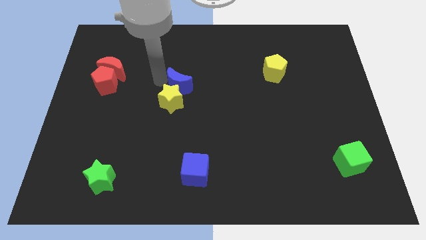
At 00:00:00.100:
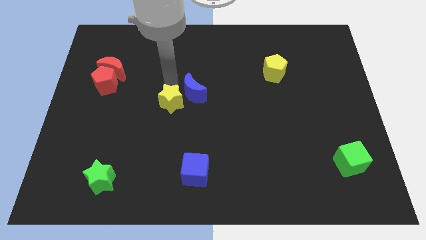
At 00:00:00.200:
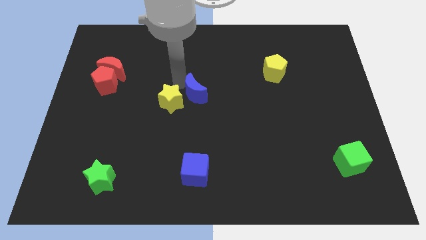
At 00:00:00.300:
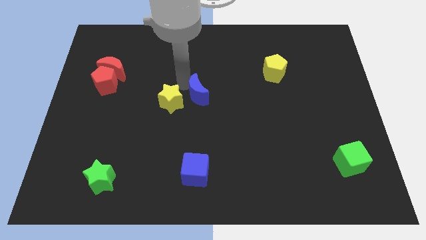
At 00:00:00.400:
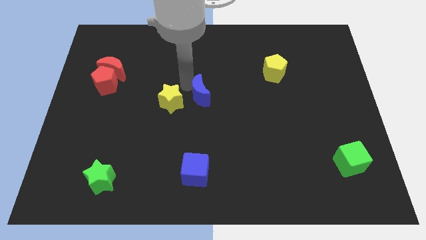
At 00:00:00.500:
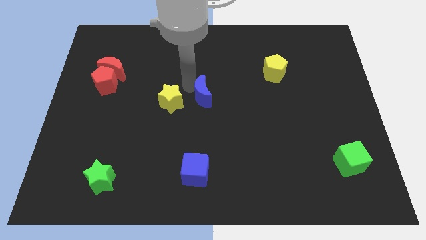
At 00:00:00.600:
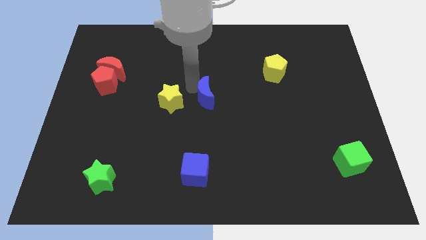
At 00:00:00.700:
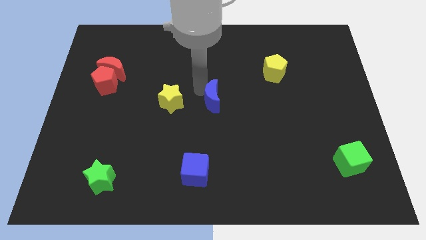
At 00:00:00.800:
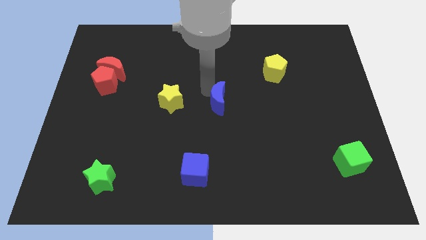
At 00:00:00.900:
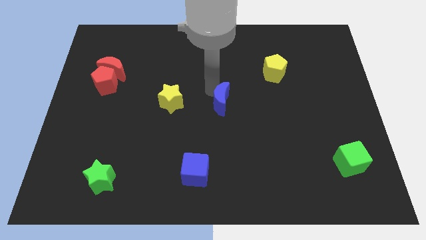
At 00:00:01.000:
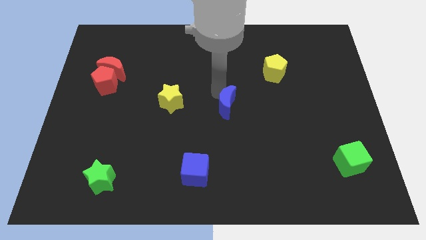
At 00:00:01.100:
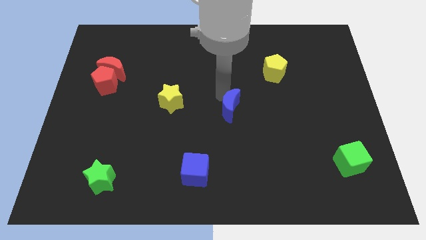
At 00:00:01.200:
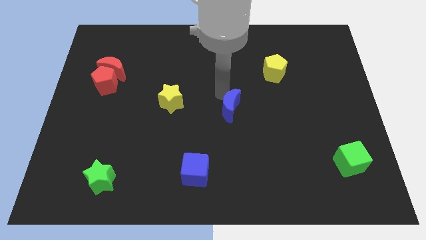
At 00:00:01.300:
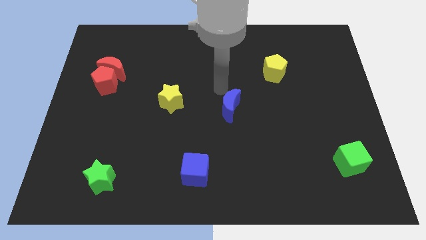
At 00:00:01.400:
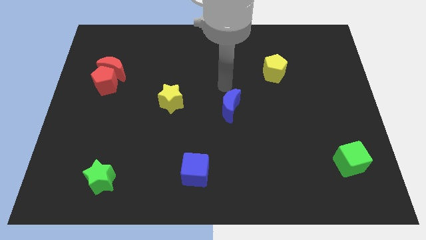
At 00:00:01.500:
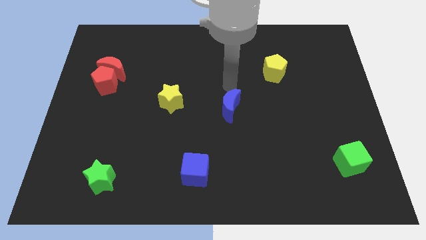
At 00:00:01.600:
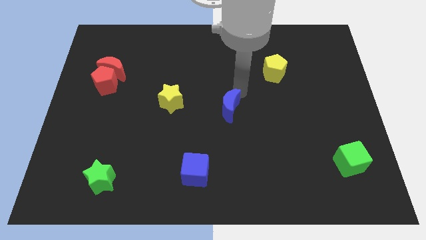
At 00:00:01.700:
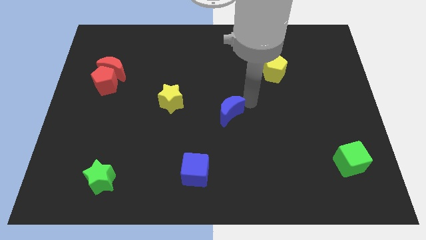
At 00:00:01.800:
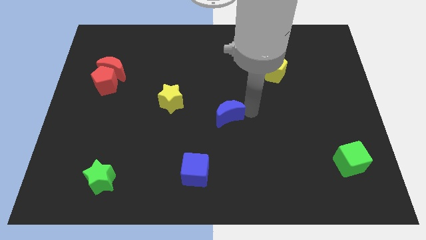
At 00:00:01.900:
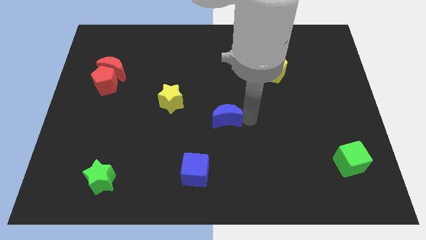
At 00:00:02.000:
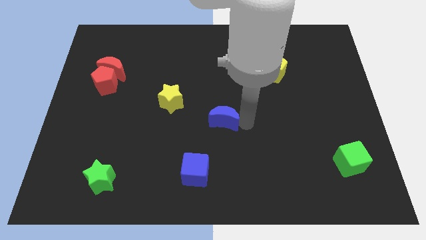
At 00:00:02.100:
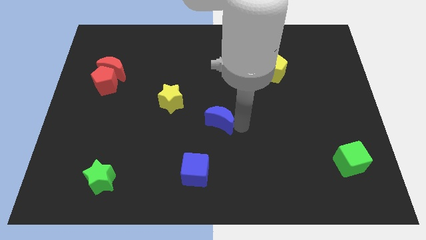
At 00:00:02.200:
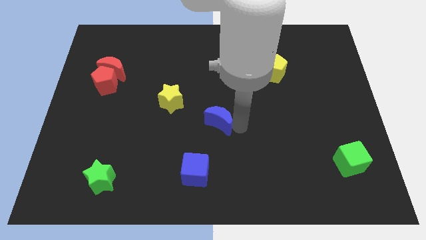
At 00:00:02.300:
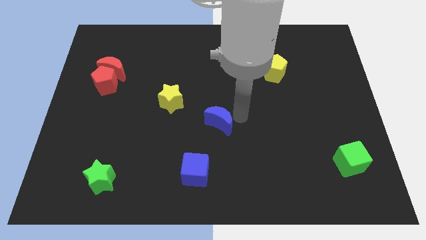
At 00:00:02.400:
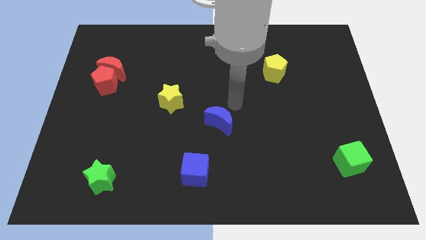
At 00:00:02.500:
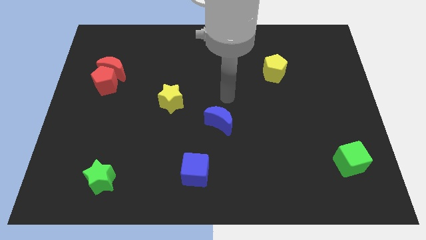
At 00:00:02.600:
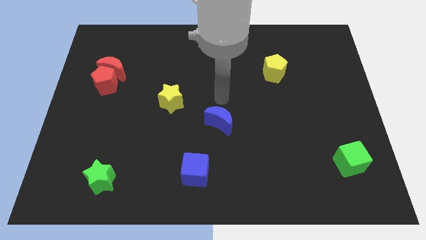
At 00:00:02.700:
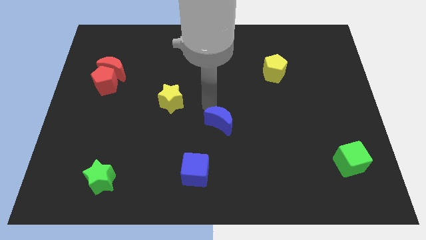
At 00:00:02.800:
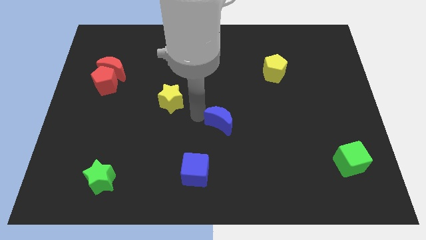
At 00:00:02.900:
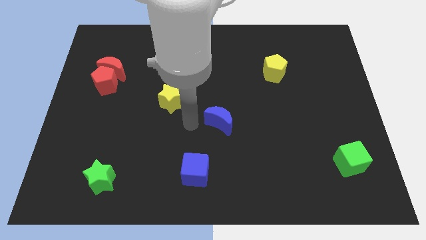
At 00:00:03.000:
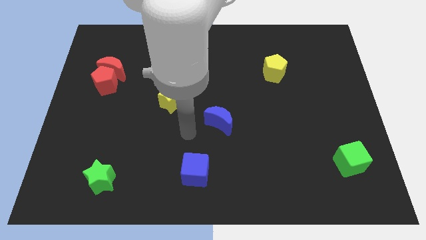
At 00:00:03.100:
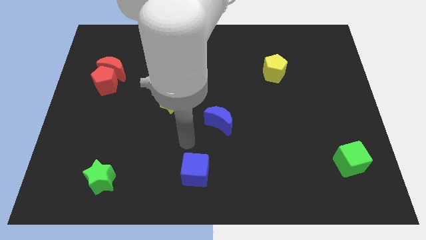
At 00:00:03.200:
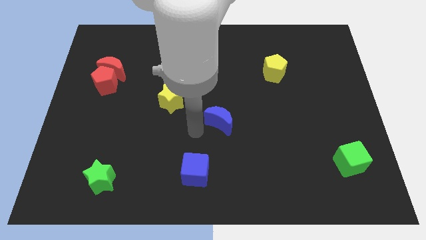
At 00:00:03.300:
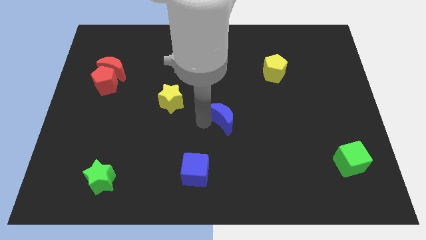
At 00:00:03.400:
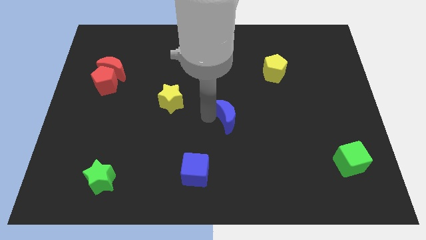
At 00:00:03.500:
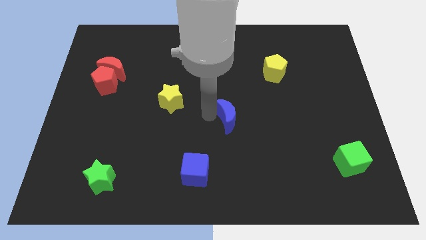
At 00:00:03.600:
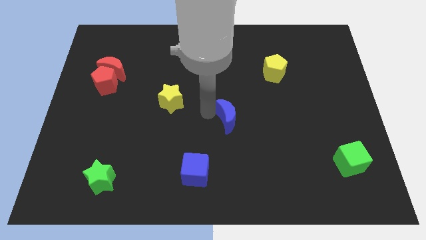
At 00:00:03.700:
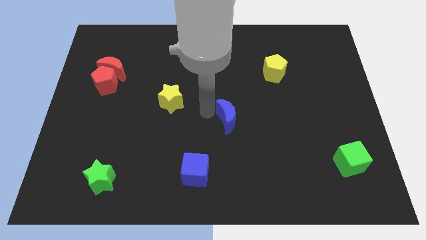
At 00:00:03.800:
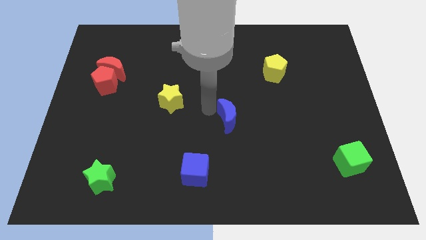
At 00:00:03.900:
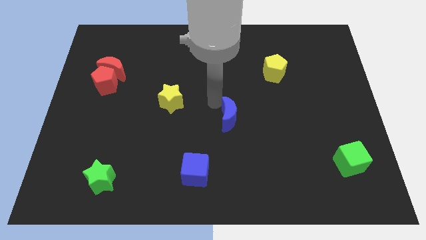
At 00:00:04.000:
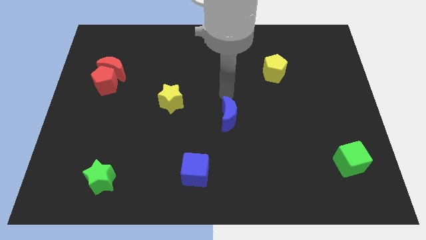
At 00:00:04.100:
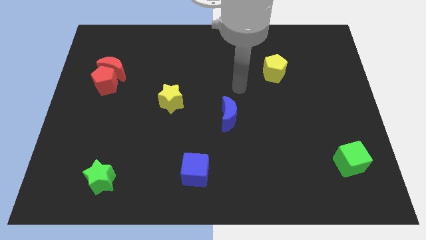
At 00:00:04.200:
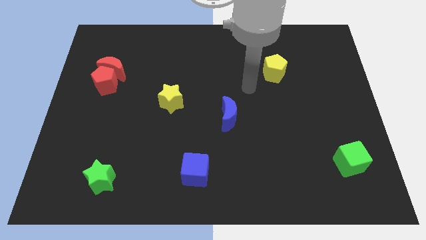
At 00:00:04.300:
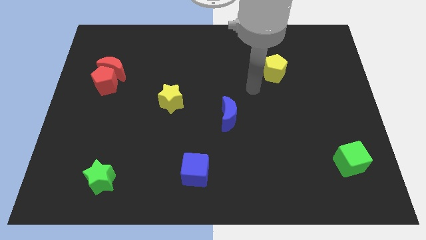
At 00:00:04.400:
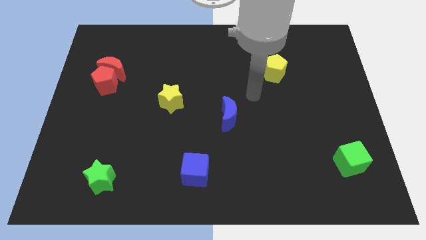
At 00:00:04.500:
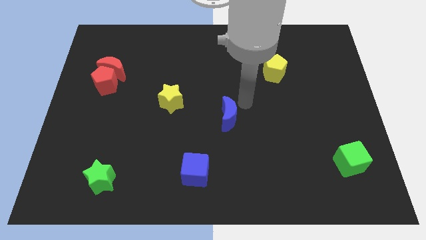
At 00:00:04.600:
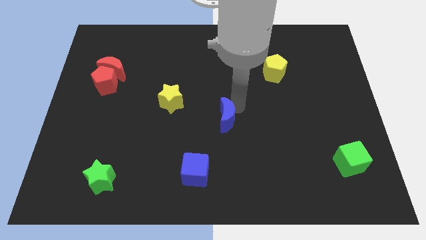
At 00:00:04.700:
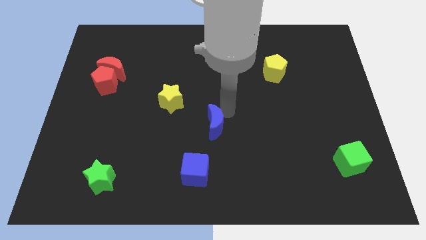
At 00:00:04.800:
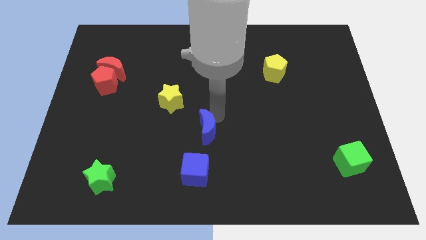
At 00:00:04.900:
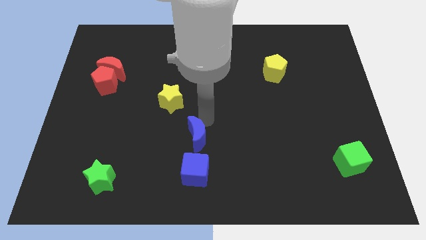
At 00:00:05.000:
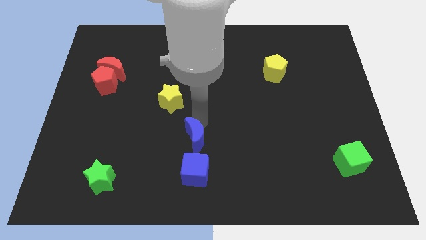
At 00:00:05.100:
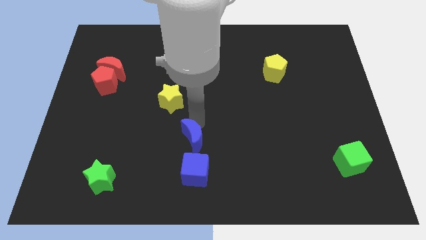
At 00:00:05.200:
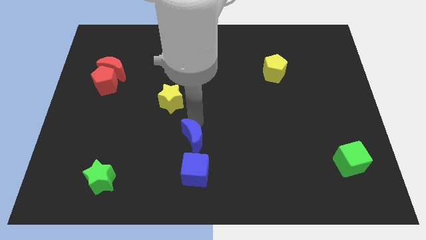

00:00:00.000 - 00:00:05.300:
place the blue crescent above the blue cube

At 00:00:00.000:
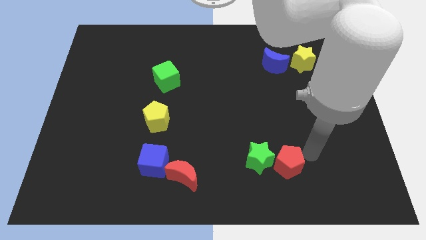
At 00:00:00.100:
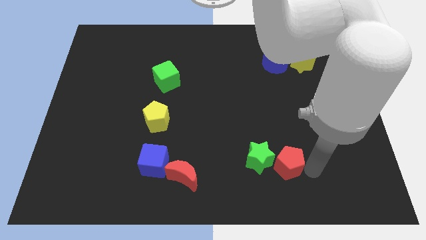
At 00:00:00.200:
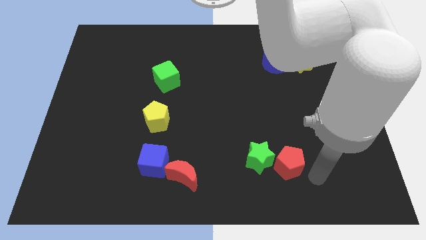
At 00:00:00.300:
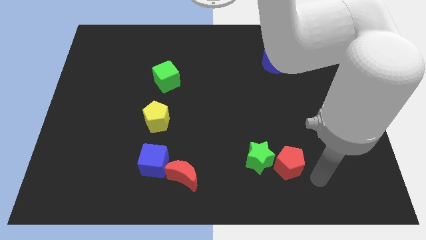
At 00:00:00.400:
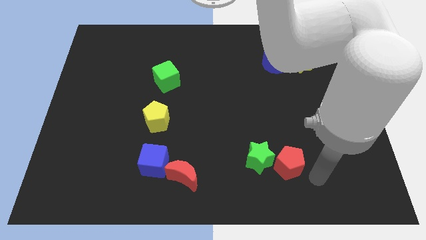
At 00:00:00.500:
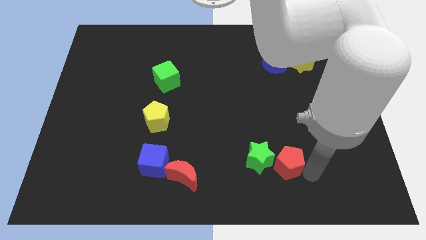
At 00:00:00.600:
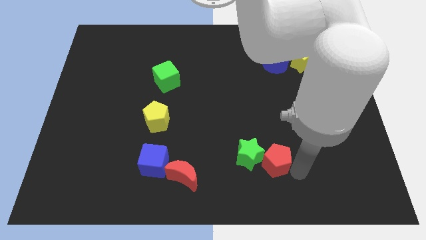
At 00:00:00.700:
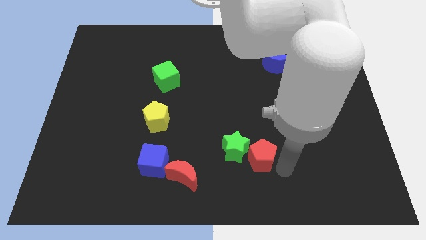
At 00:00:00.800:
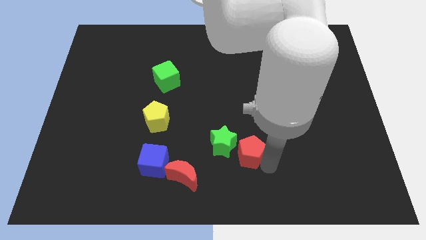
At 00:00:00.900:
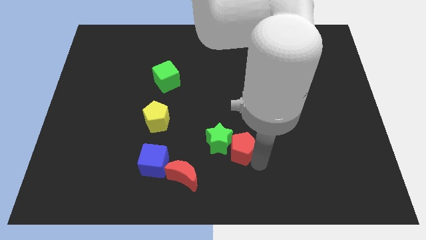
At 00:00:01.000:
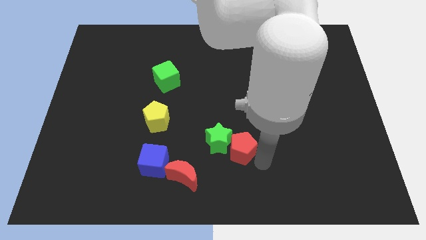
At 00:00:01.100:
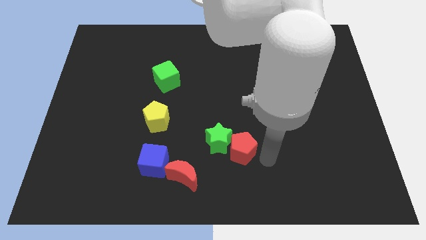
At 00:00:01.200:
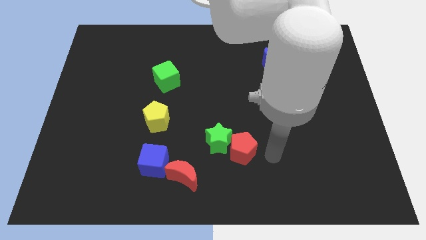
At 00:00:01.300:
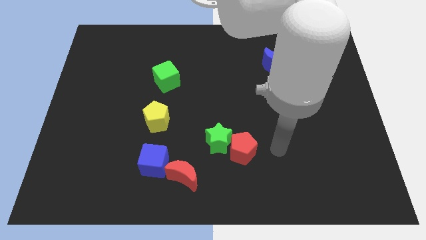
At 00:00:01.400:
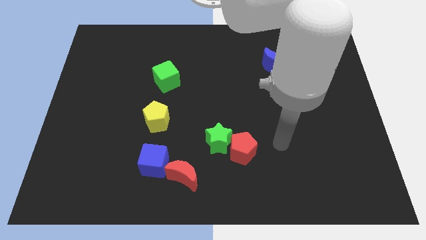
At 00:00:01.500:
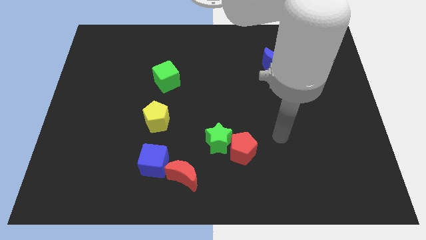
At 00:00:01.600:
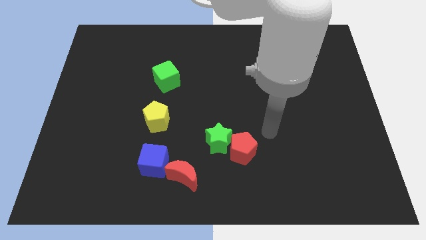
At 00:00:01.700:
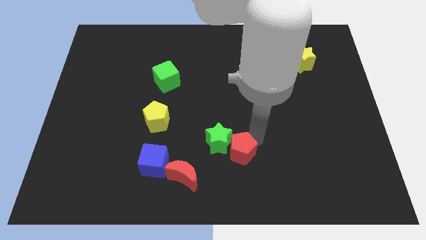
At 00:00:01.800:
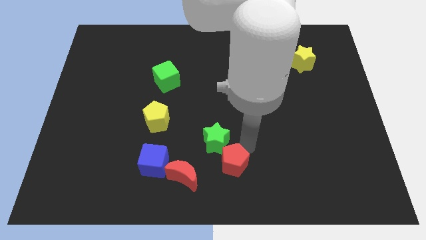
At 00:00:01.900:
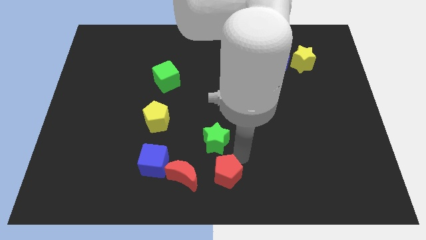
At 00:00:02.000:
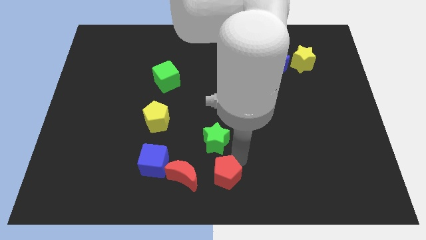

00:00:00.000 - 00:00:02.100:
push the green starnwith the red pentagon

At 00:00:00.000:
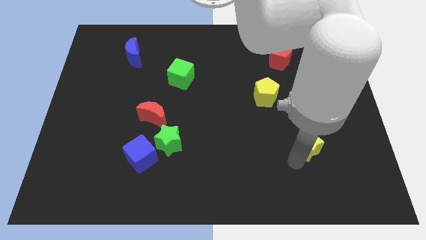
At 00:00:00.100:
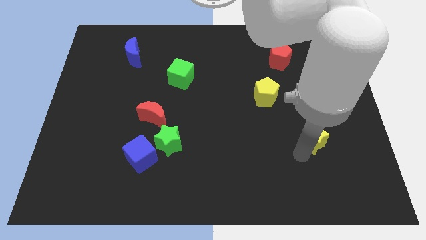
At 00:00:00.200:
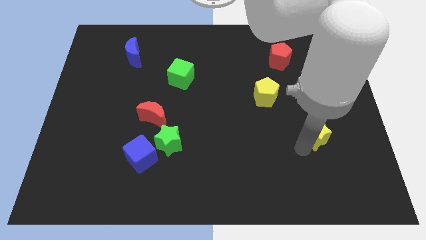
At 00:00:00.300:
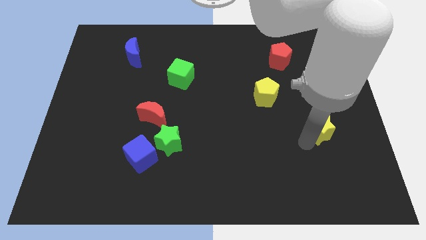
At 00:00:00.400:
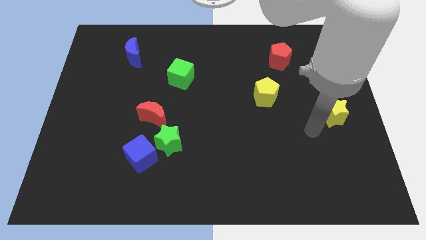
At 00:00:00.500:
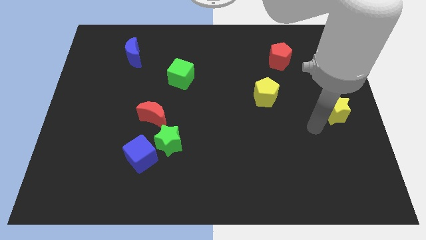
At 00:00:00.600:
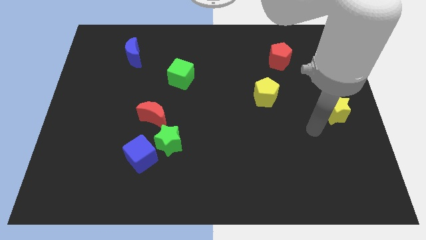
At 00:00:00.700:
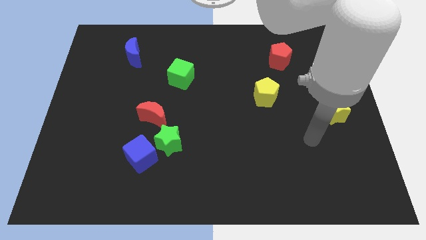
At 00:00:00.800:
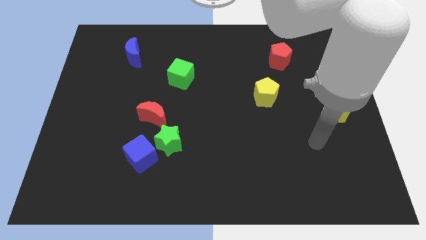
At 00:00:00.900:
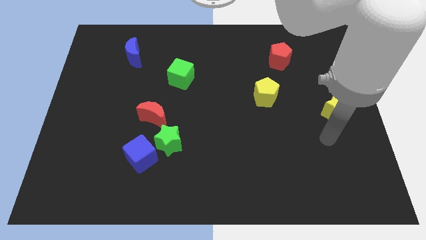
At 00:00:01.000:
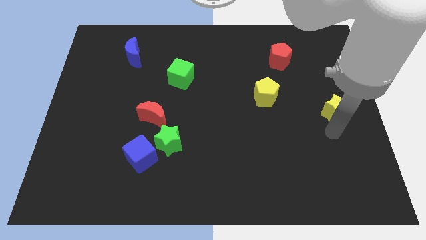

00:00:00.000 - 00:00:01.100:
push the yellow star to the top of the board

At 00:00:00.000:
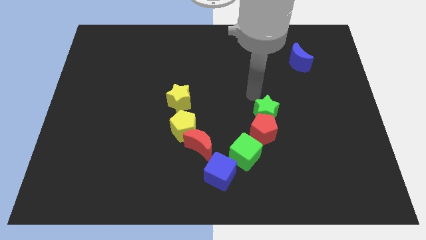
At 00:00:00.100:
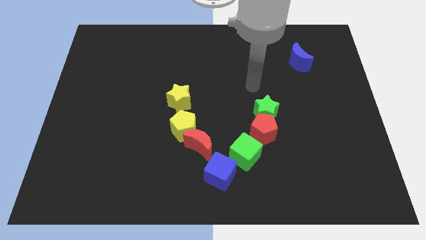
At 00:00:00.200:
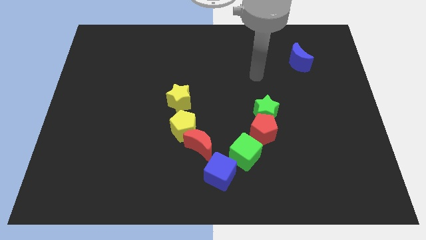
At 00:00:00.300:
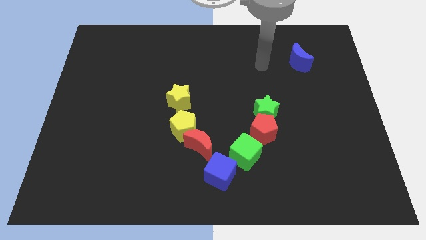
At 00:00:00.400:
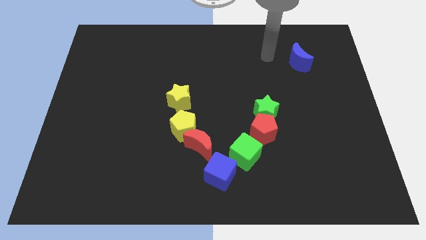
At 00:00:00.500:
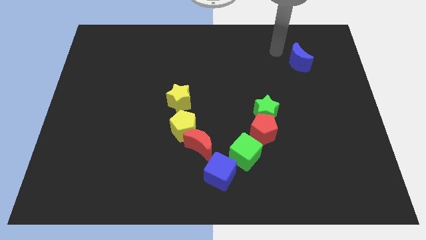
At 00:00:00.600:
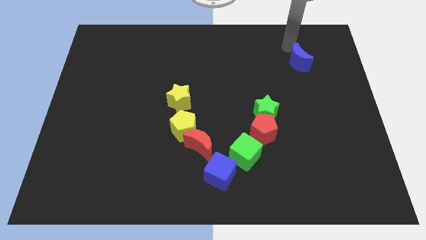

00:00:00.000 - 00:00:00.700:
move the arm away from the green star
